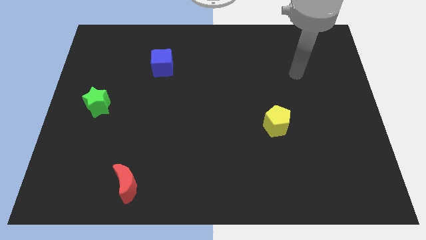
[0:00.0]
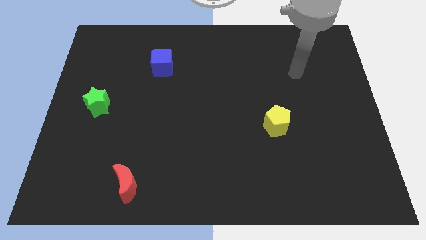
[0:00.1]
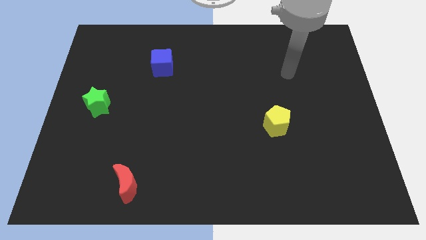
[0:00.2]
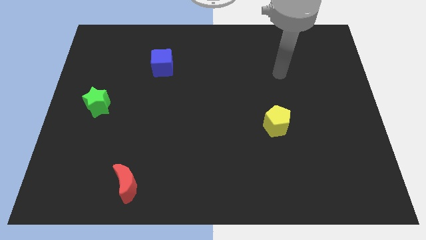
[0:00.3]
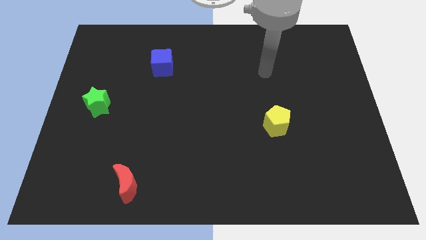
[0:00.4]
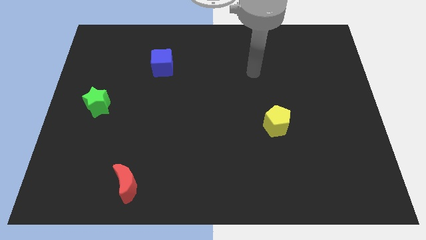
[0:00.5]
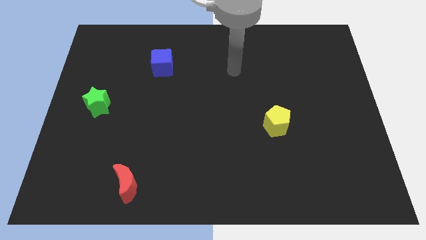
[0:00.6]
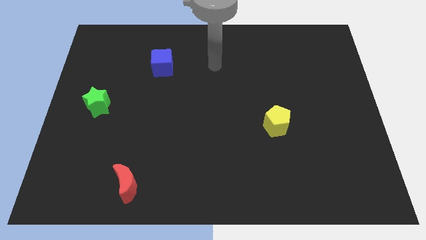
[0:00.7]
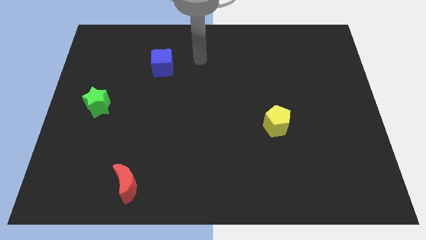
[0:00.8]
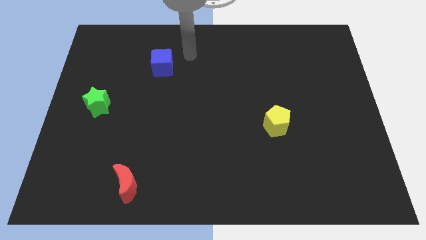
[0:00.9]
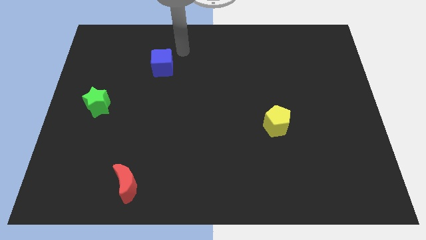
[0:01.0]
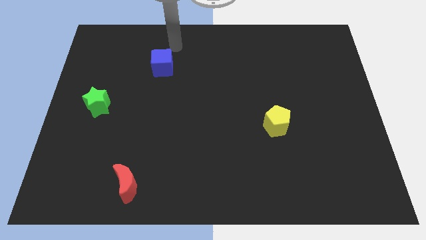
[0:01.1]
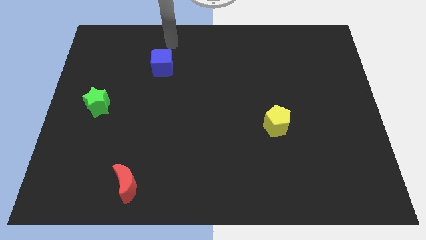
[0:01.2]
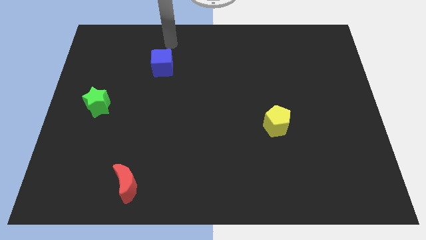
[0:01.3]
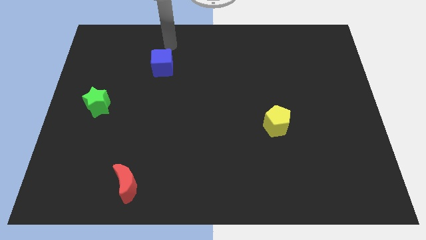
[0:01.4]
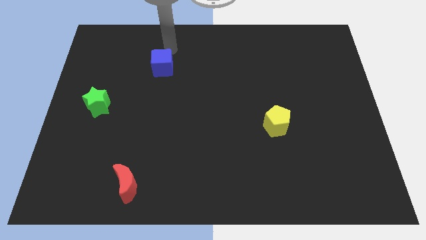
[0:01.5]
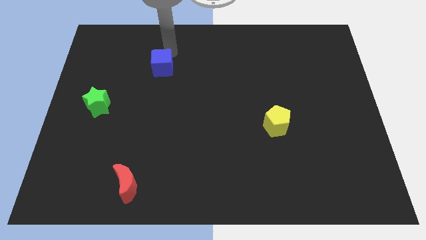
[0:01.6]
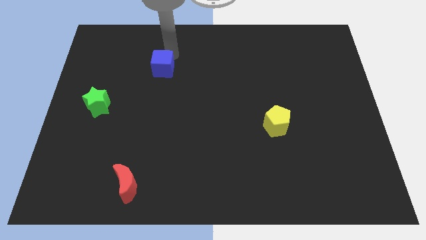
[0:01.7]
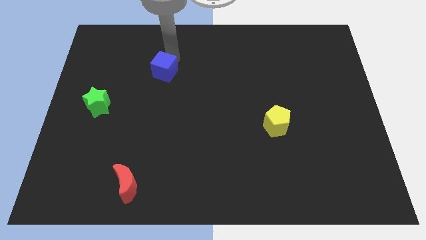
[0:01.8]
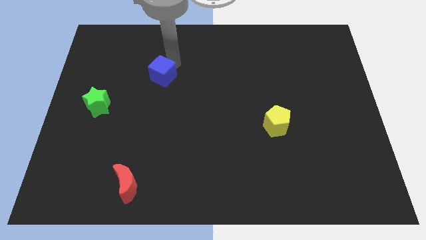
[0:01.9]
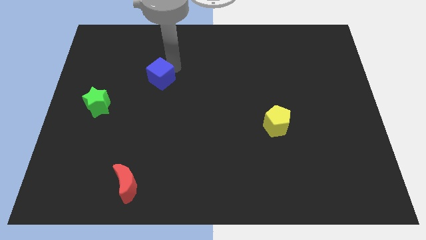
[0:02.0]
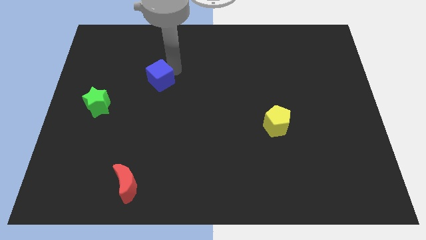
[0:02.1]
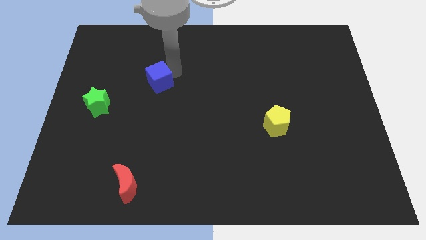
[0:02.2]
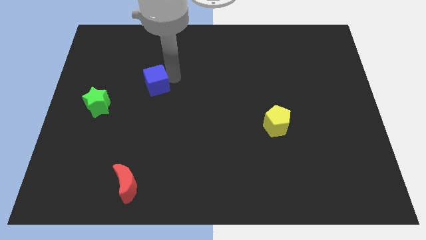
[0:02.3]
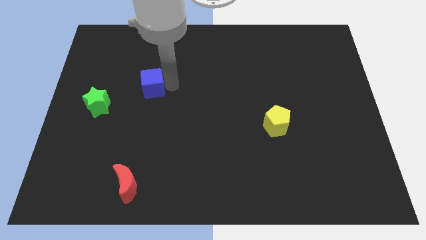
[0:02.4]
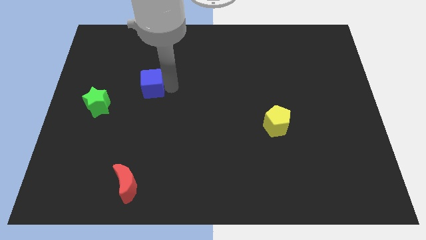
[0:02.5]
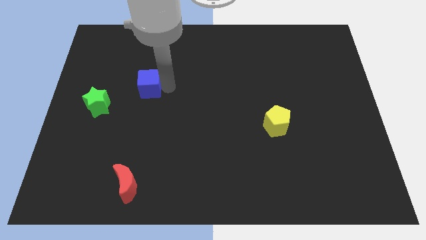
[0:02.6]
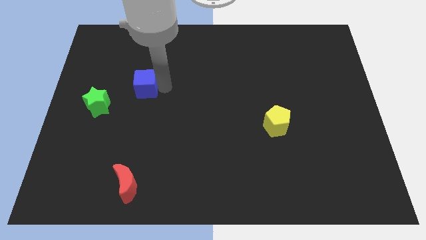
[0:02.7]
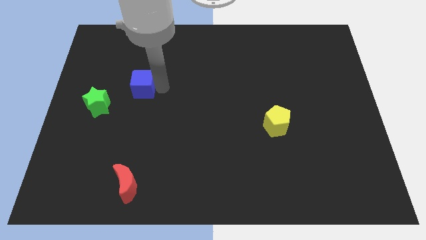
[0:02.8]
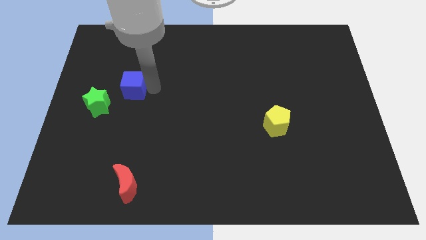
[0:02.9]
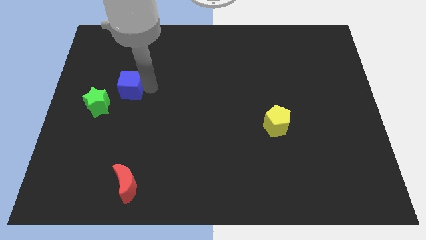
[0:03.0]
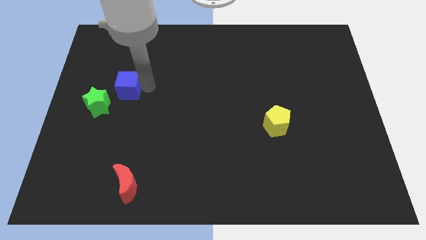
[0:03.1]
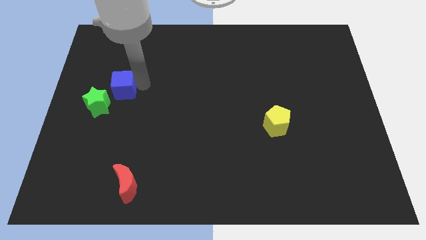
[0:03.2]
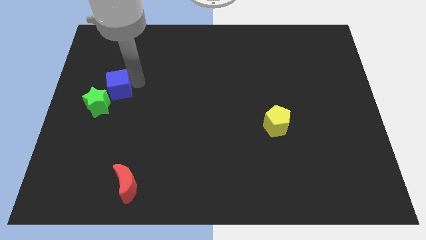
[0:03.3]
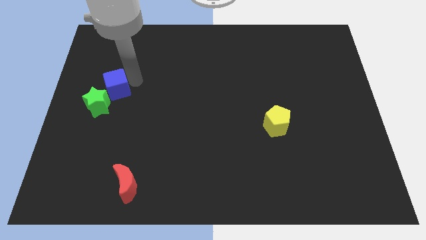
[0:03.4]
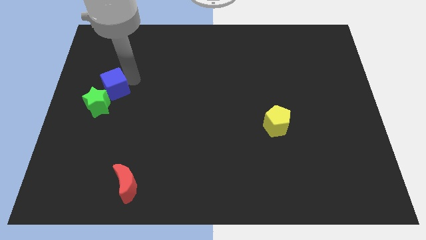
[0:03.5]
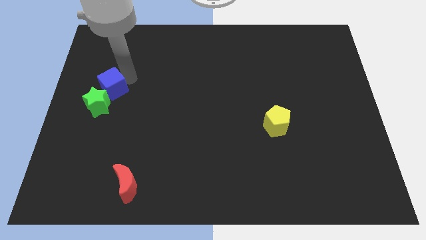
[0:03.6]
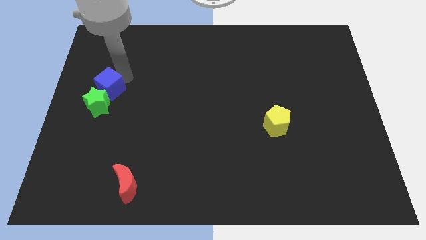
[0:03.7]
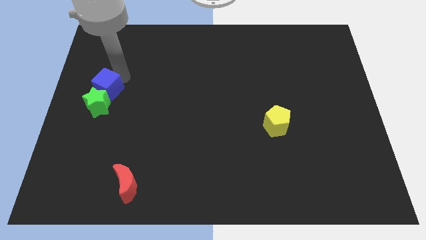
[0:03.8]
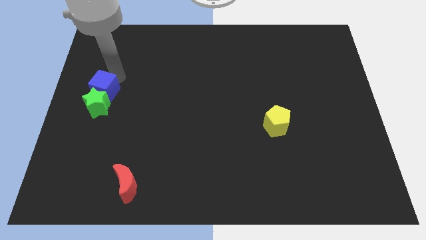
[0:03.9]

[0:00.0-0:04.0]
slide the blue block to the green star

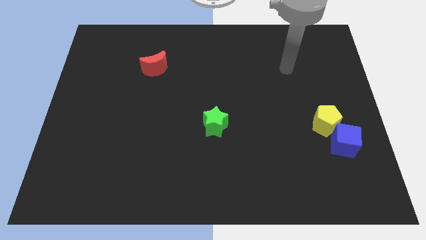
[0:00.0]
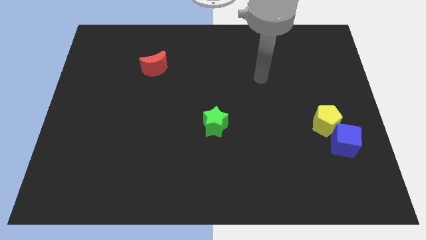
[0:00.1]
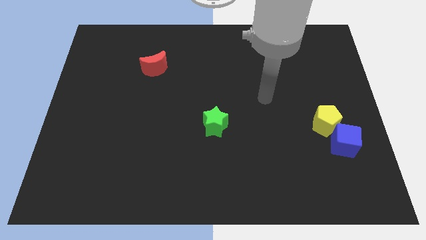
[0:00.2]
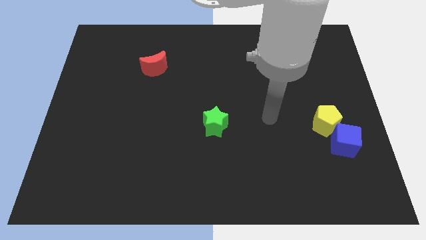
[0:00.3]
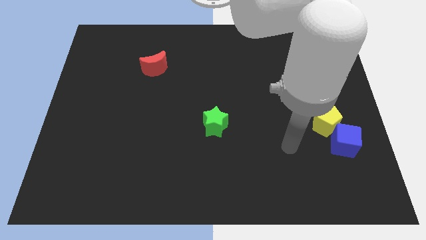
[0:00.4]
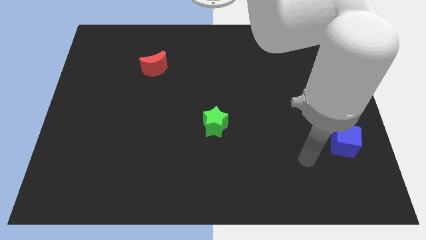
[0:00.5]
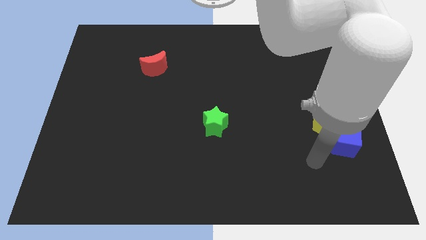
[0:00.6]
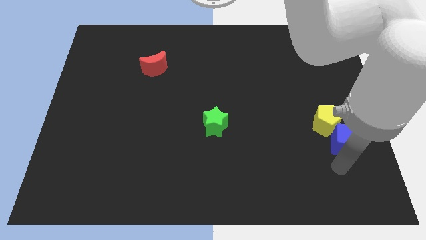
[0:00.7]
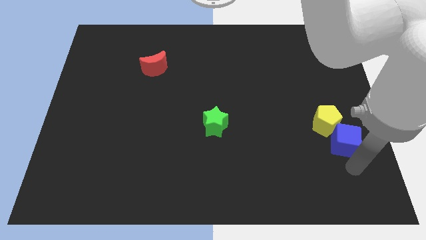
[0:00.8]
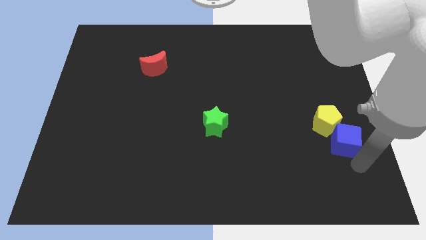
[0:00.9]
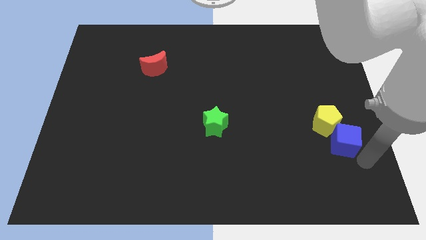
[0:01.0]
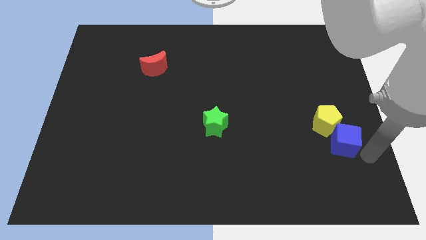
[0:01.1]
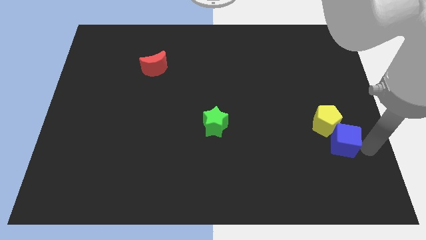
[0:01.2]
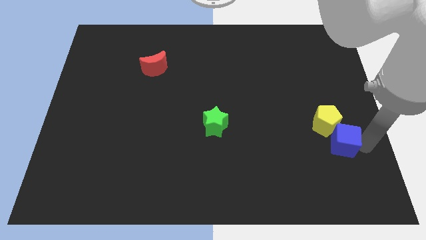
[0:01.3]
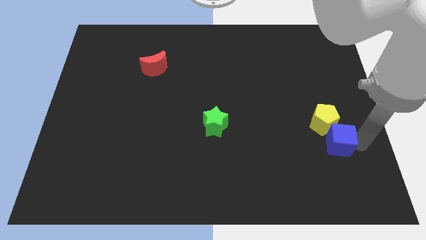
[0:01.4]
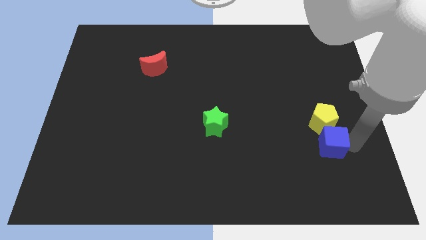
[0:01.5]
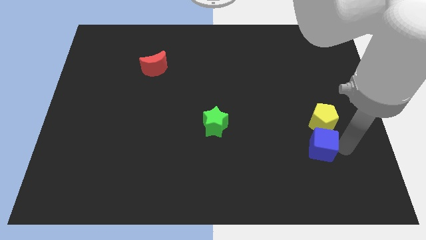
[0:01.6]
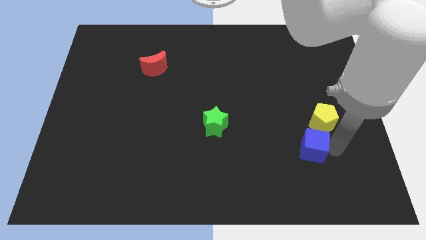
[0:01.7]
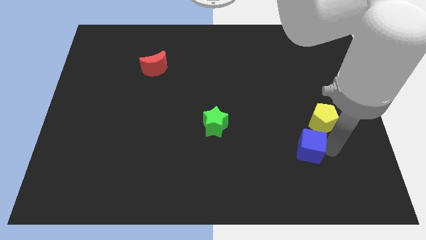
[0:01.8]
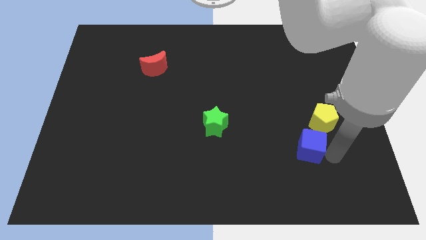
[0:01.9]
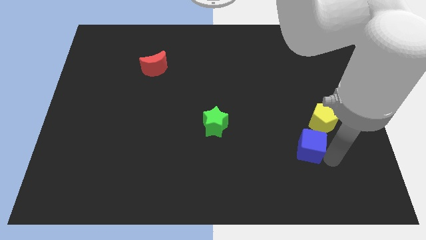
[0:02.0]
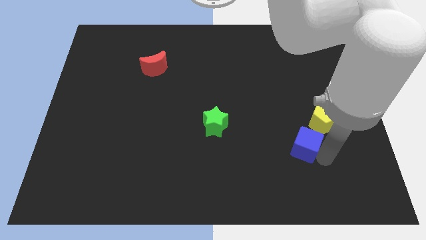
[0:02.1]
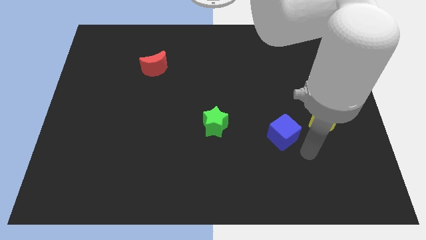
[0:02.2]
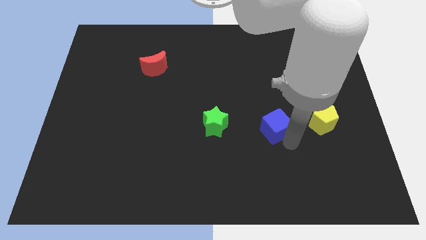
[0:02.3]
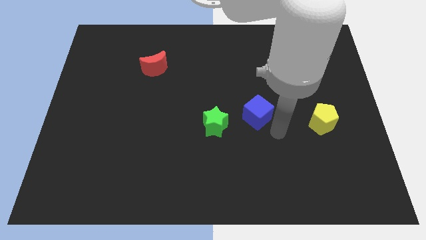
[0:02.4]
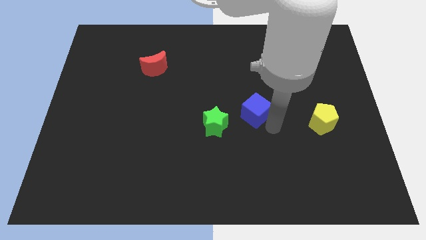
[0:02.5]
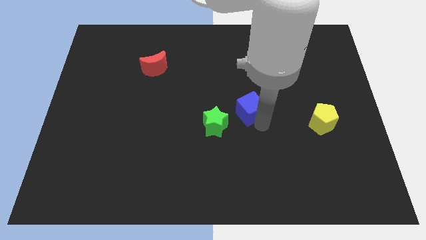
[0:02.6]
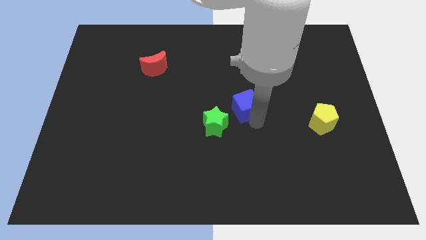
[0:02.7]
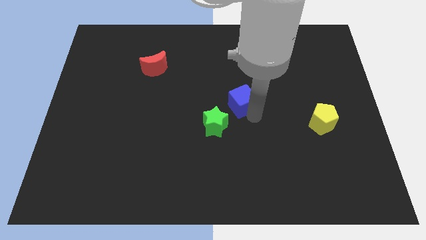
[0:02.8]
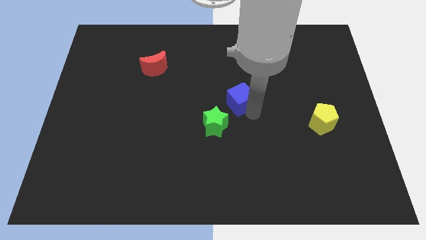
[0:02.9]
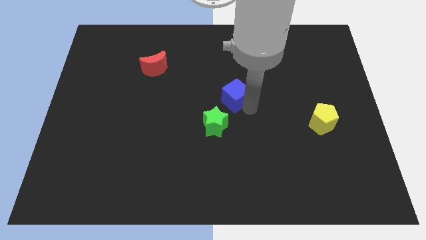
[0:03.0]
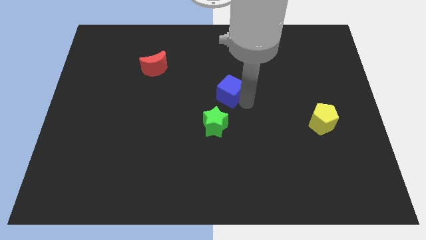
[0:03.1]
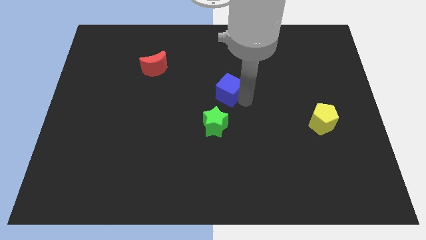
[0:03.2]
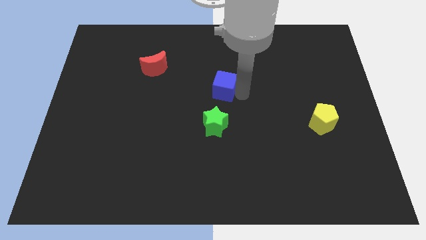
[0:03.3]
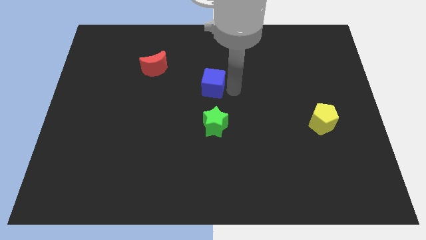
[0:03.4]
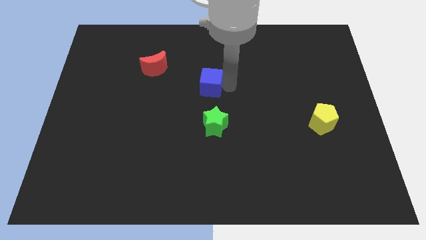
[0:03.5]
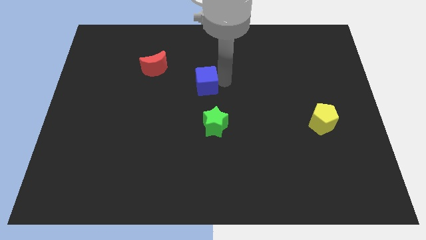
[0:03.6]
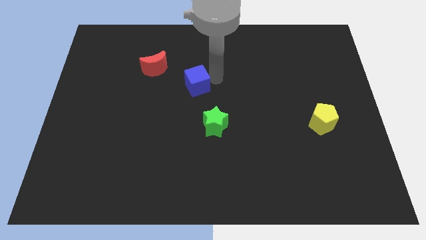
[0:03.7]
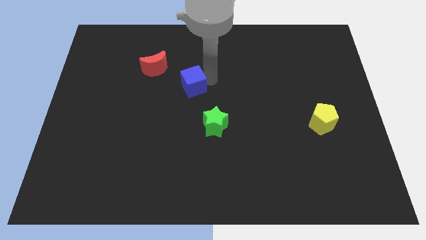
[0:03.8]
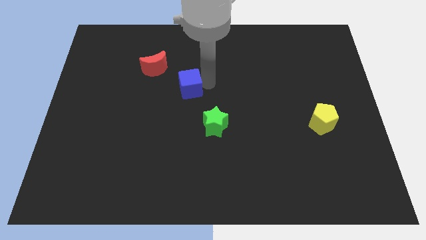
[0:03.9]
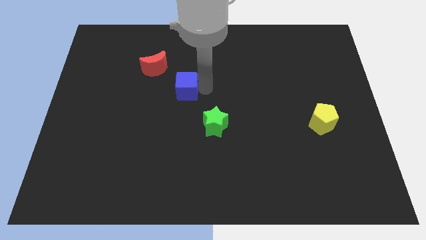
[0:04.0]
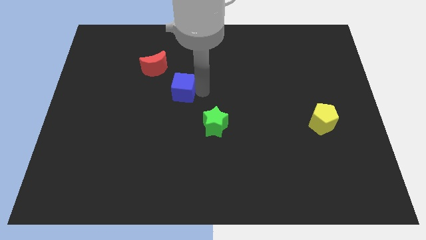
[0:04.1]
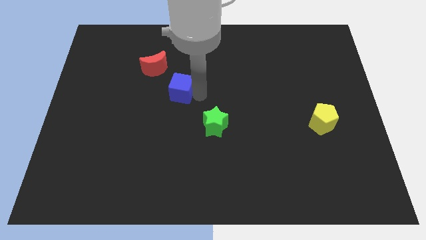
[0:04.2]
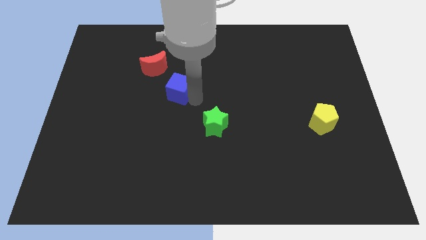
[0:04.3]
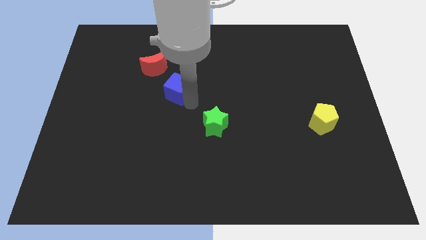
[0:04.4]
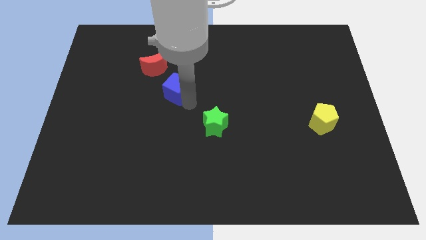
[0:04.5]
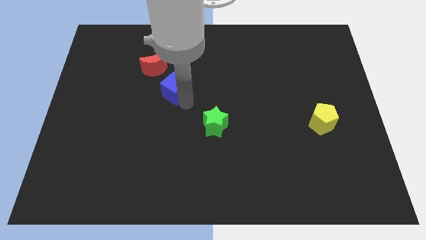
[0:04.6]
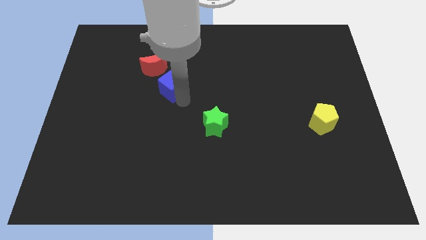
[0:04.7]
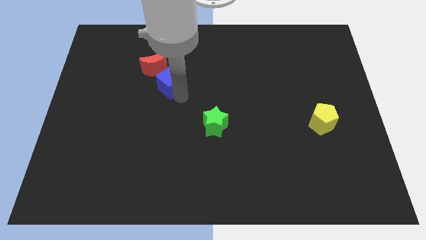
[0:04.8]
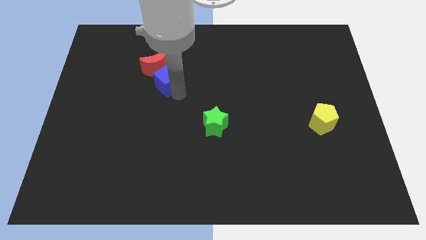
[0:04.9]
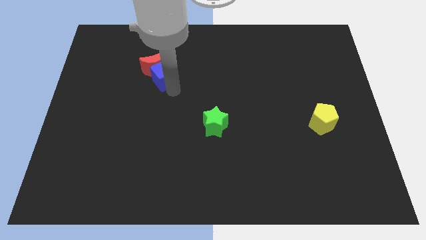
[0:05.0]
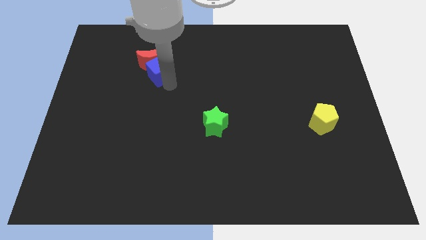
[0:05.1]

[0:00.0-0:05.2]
put the cube next to the red block
